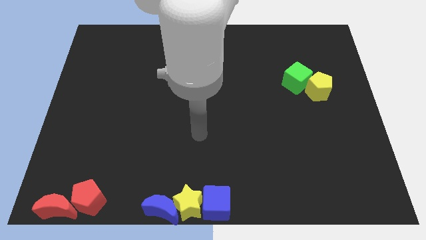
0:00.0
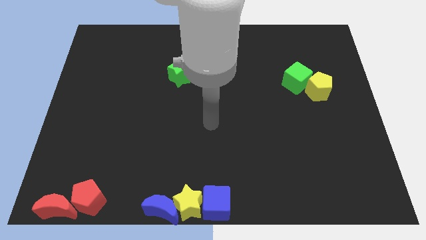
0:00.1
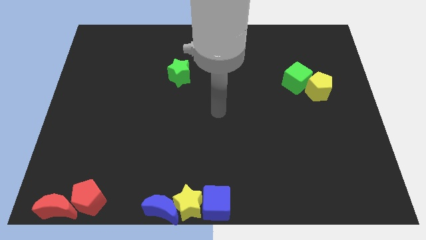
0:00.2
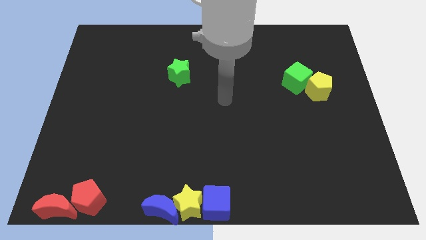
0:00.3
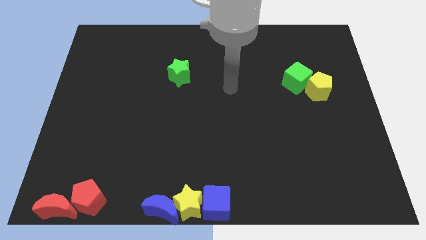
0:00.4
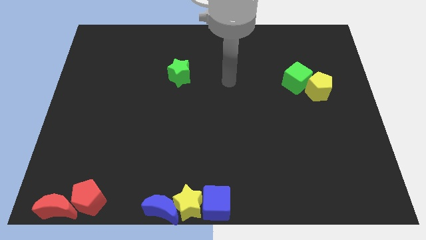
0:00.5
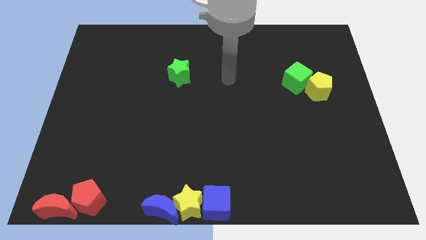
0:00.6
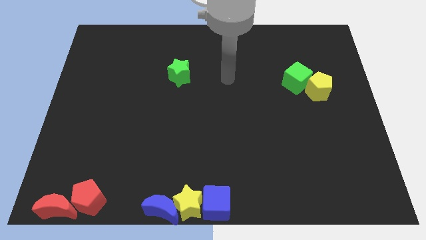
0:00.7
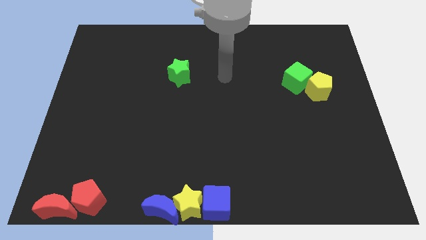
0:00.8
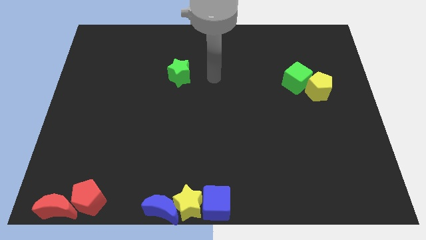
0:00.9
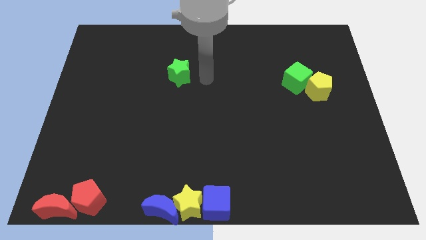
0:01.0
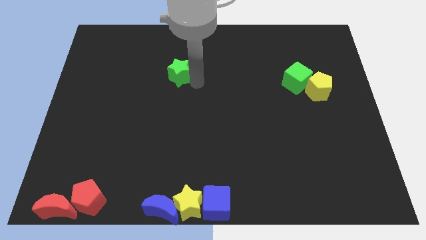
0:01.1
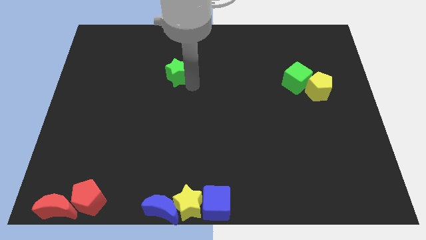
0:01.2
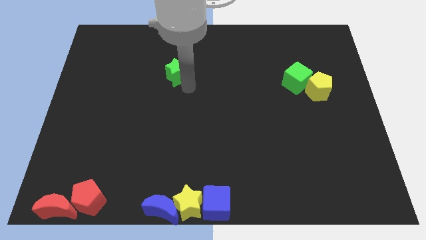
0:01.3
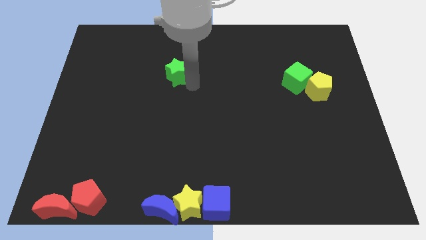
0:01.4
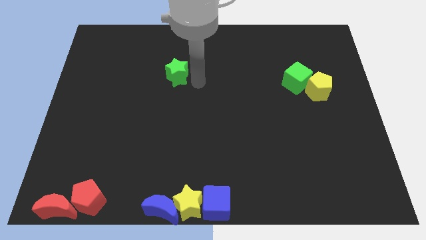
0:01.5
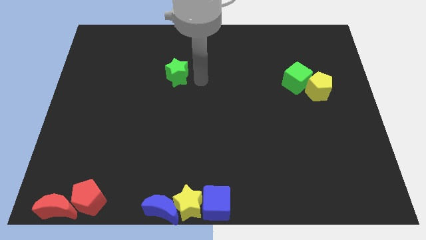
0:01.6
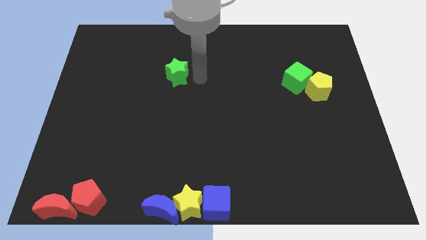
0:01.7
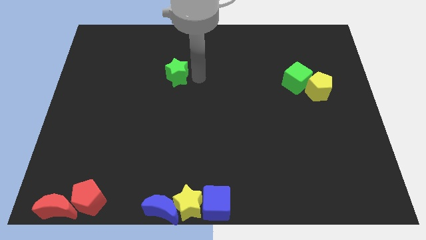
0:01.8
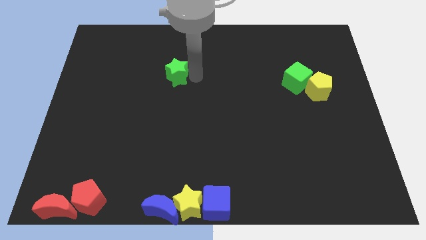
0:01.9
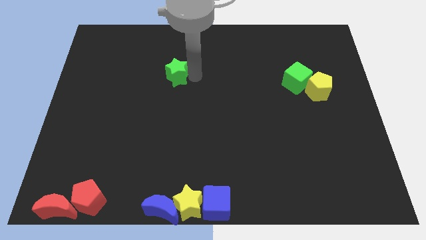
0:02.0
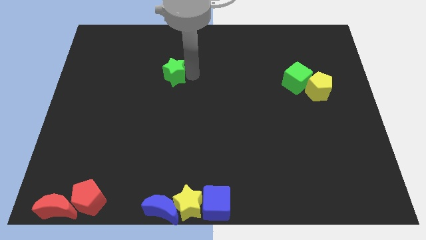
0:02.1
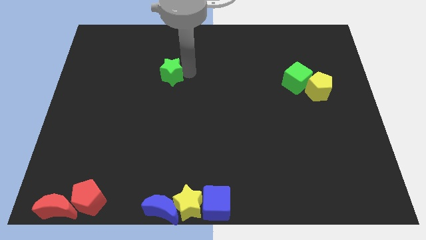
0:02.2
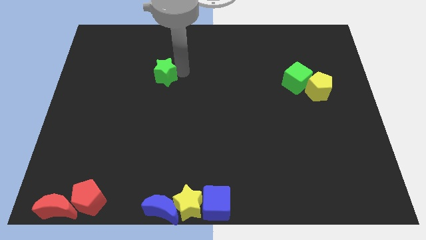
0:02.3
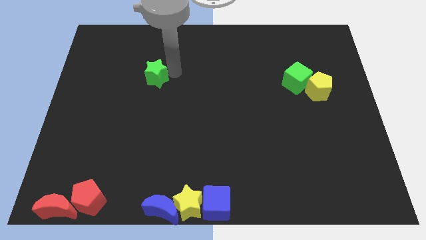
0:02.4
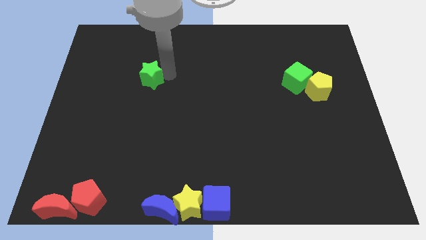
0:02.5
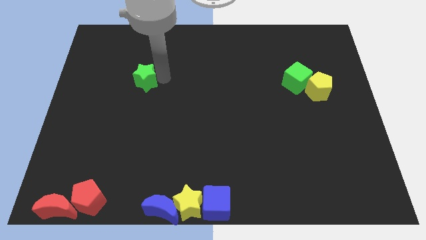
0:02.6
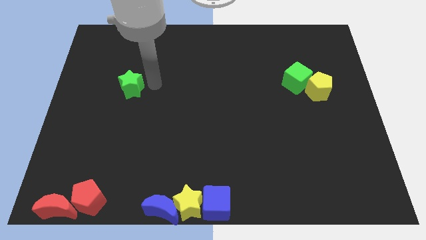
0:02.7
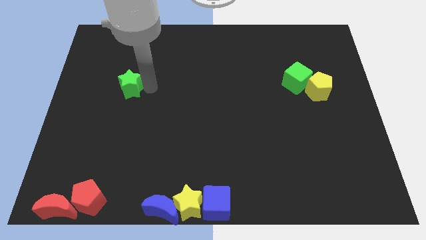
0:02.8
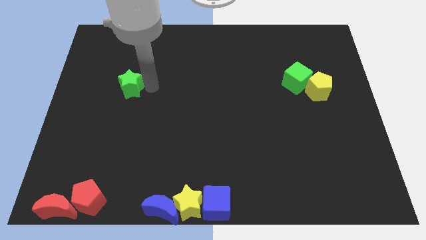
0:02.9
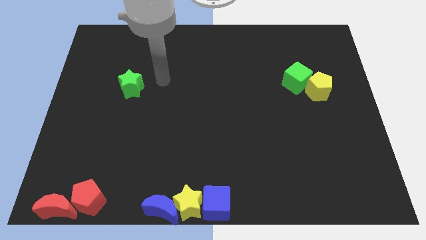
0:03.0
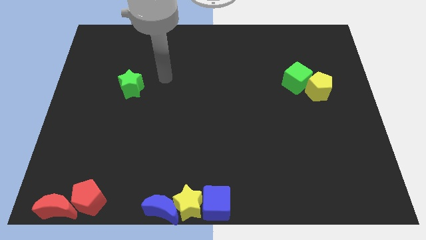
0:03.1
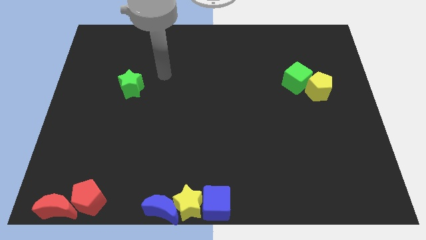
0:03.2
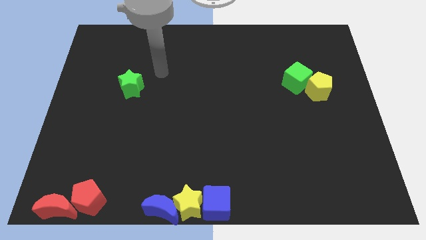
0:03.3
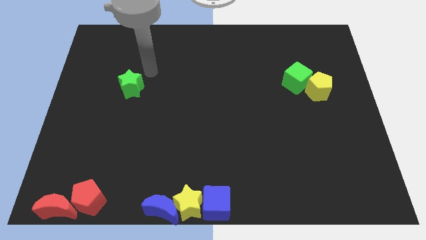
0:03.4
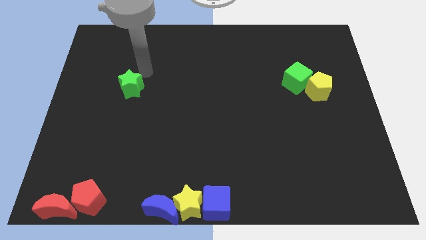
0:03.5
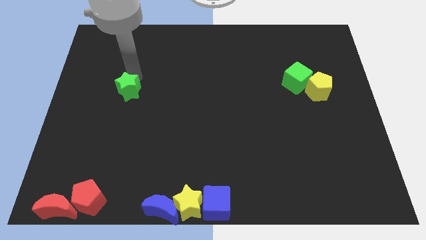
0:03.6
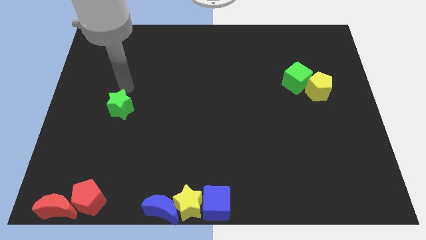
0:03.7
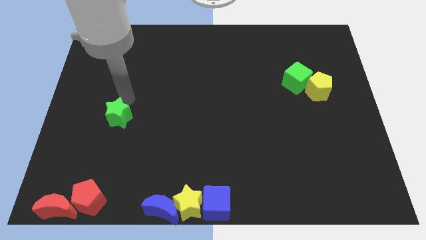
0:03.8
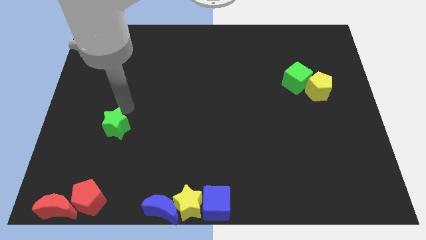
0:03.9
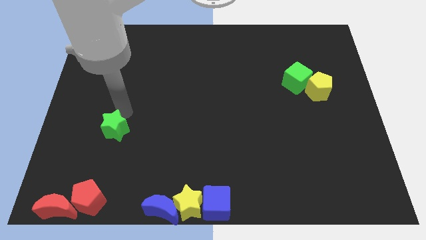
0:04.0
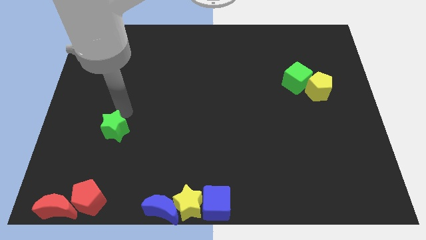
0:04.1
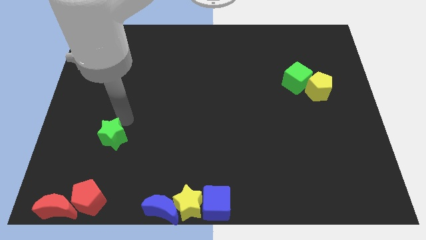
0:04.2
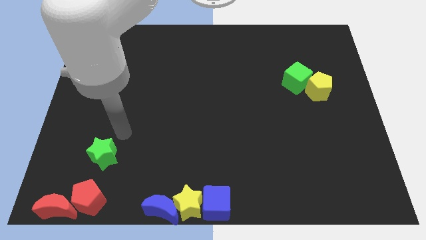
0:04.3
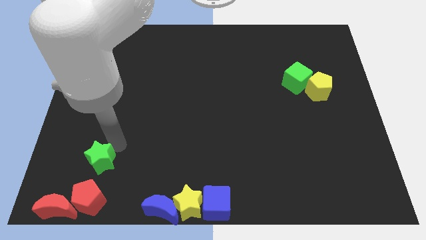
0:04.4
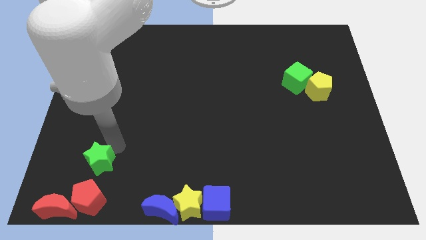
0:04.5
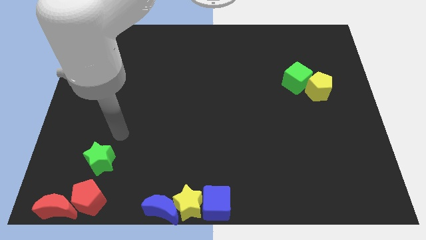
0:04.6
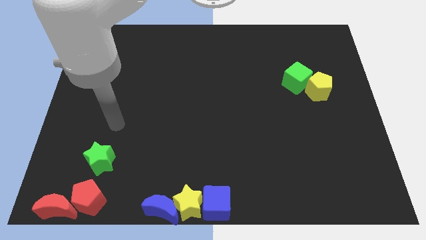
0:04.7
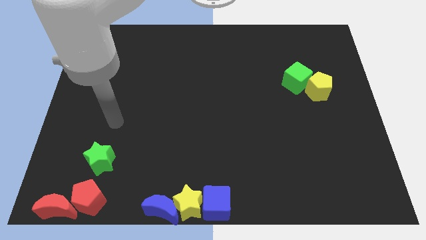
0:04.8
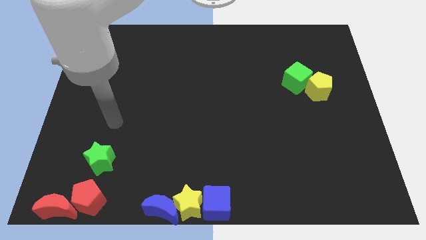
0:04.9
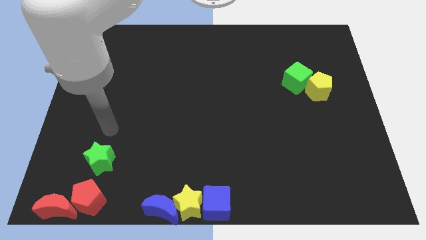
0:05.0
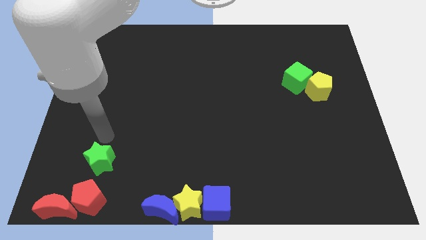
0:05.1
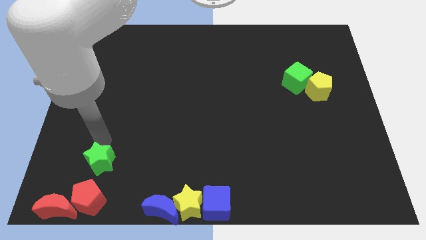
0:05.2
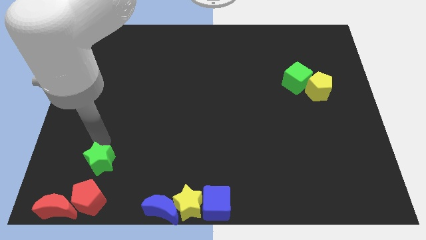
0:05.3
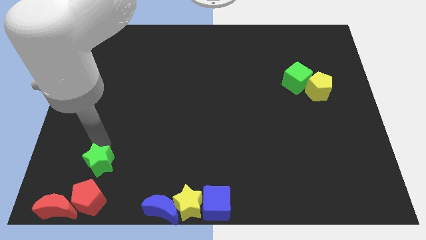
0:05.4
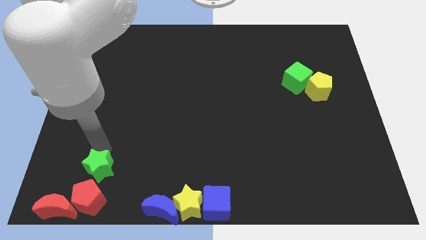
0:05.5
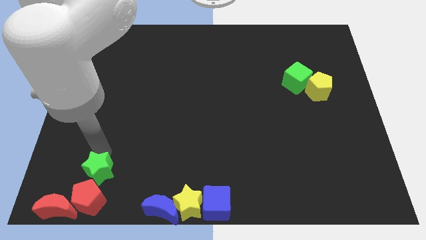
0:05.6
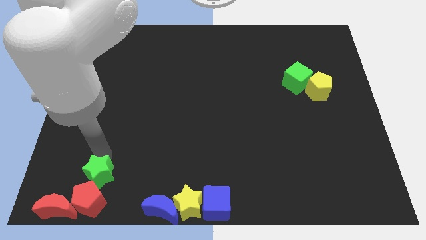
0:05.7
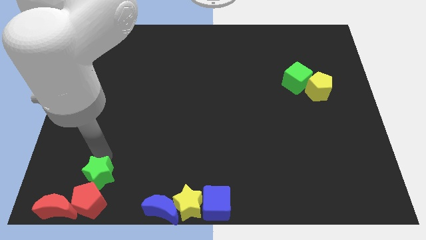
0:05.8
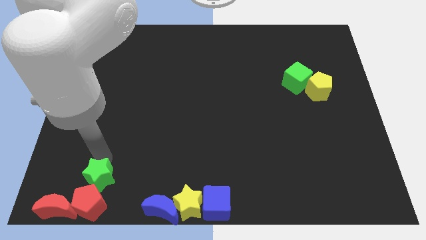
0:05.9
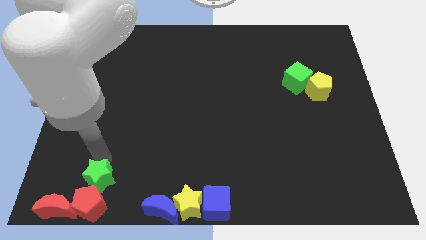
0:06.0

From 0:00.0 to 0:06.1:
push the green star to the top of the red pentagon

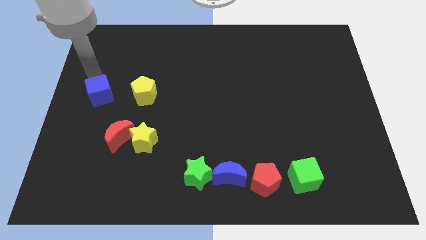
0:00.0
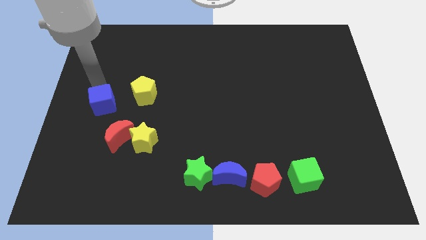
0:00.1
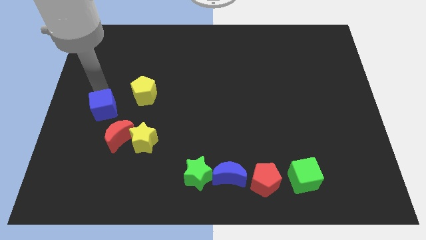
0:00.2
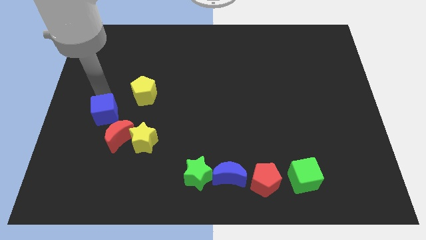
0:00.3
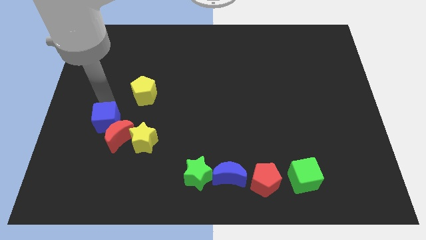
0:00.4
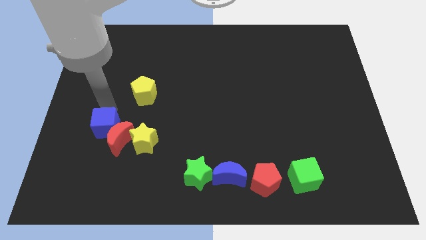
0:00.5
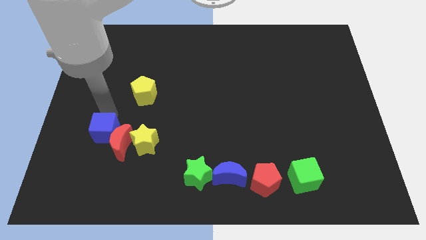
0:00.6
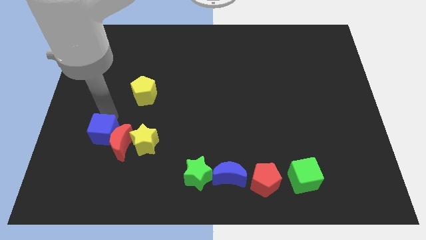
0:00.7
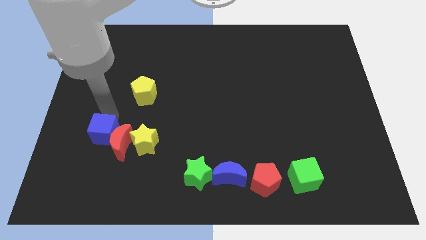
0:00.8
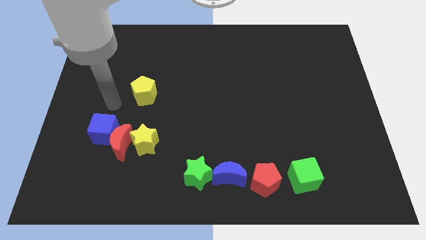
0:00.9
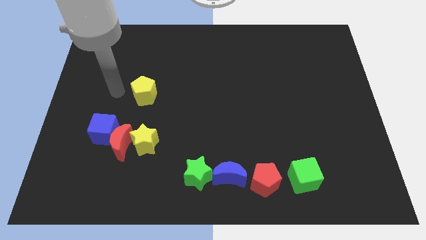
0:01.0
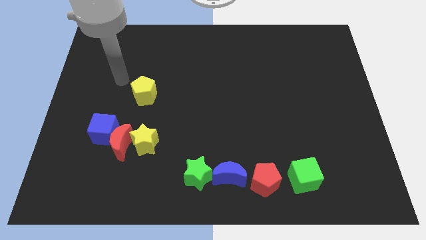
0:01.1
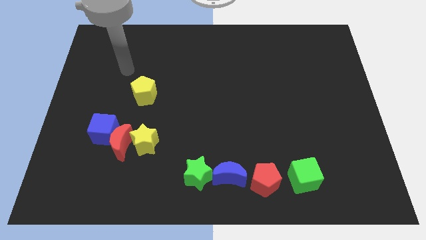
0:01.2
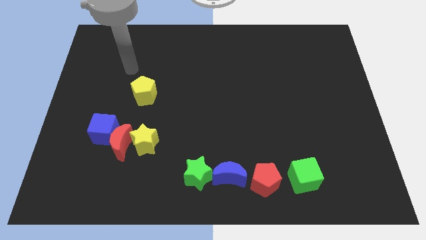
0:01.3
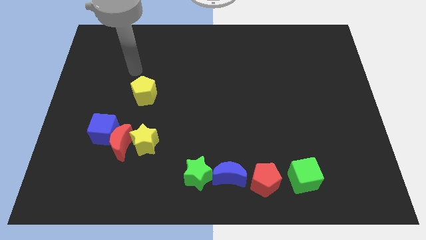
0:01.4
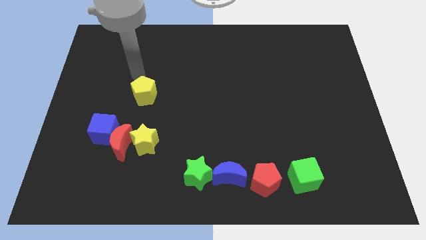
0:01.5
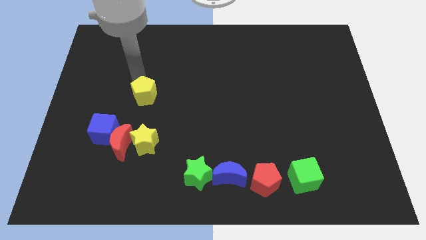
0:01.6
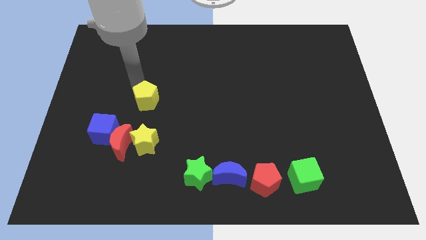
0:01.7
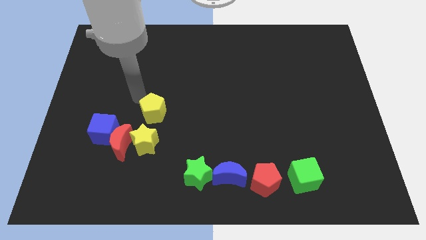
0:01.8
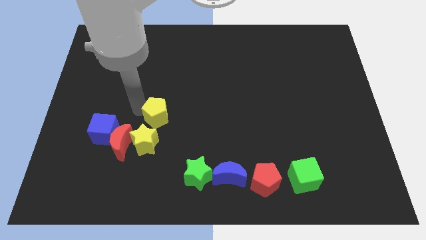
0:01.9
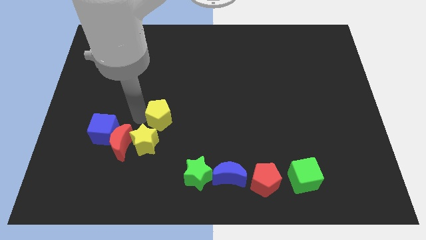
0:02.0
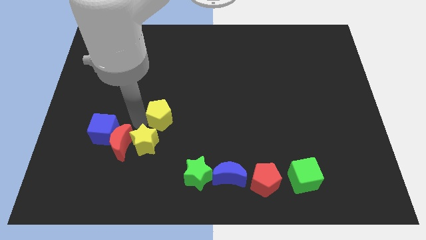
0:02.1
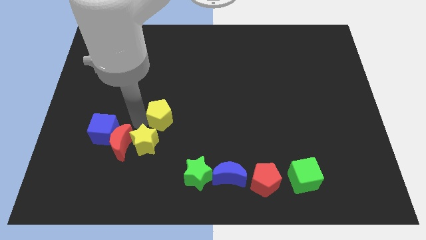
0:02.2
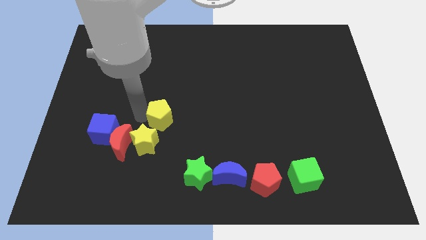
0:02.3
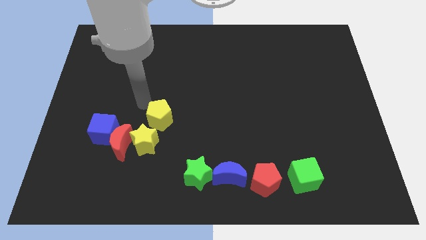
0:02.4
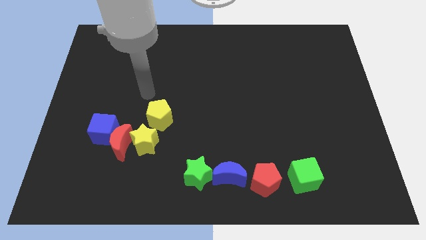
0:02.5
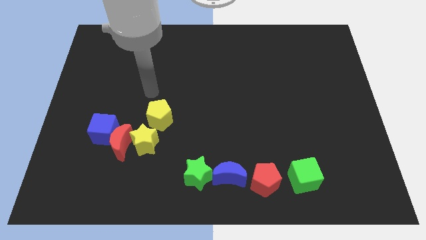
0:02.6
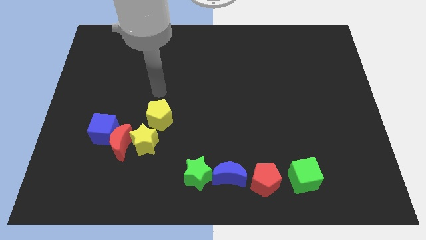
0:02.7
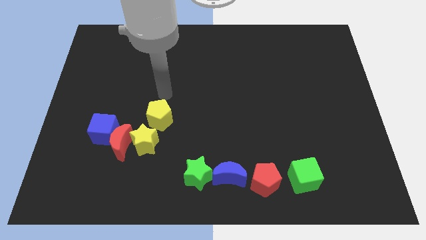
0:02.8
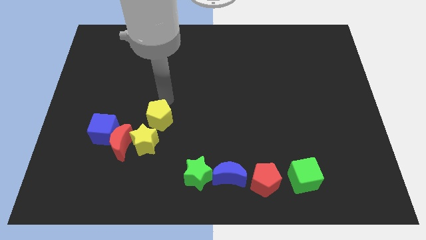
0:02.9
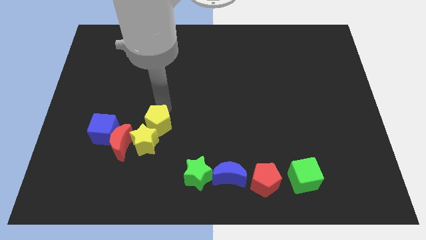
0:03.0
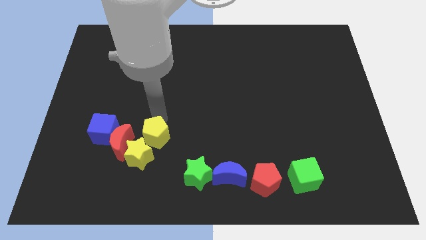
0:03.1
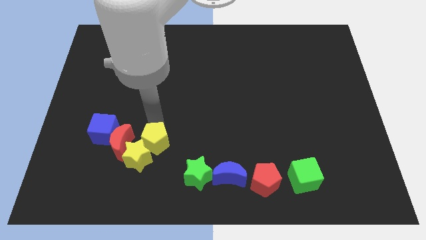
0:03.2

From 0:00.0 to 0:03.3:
slide the blue cube and yellow pentagon into group of blocks
